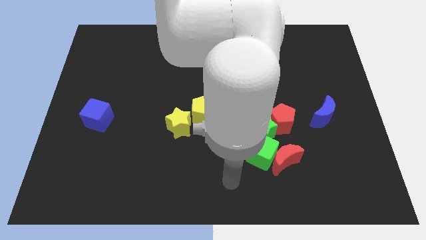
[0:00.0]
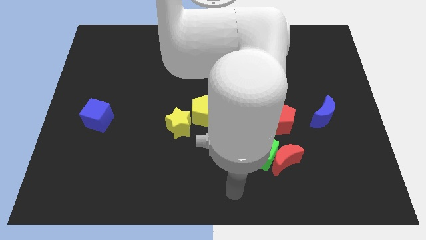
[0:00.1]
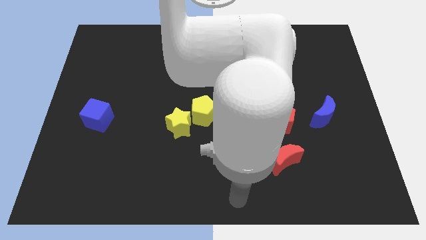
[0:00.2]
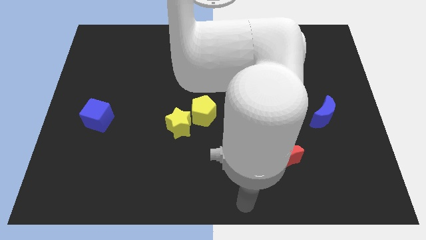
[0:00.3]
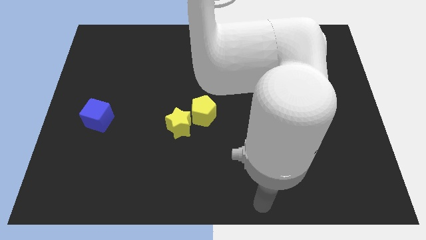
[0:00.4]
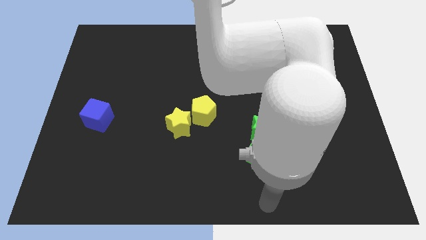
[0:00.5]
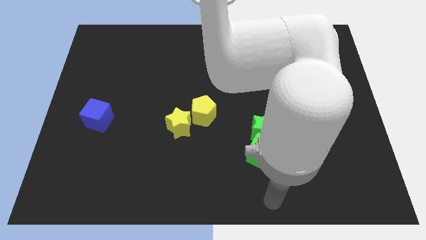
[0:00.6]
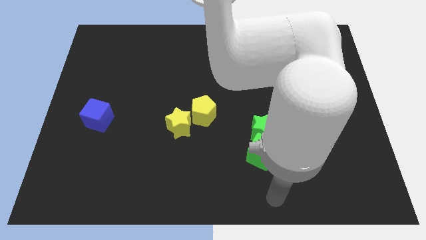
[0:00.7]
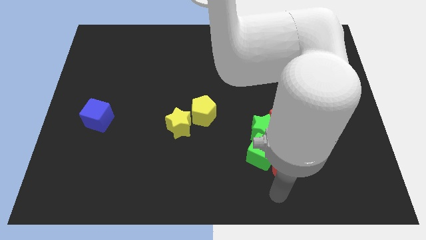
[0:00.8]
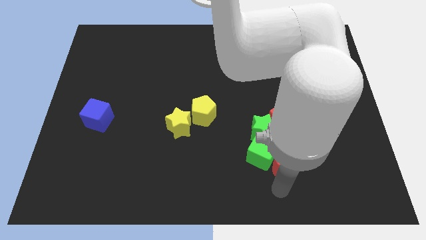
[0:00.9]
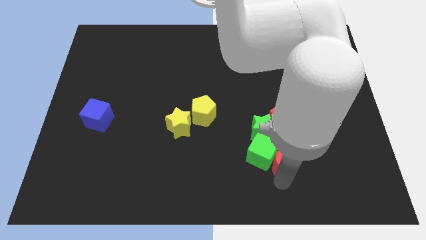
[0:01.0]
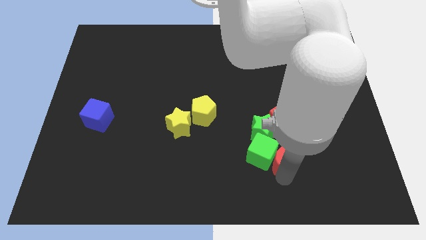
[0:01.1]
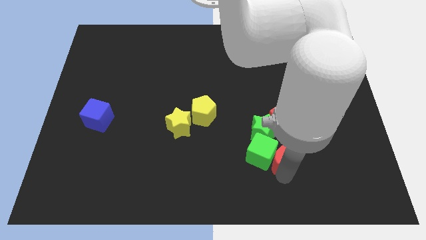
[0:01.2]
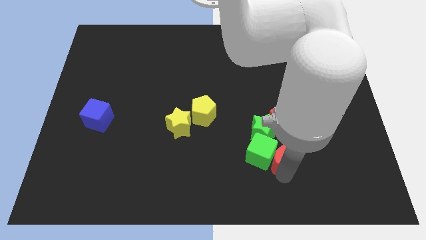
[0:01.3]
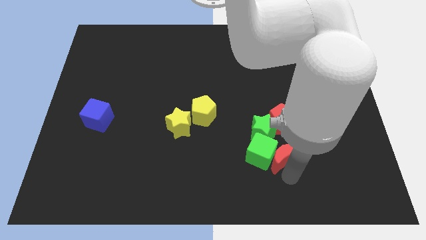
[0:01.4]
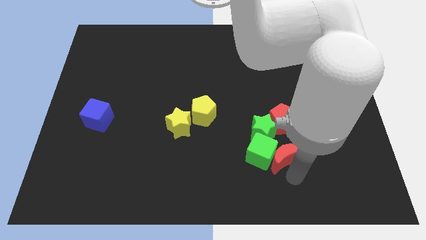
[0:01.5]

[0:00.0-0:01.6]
move the red moon slightly

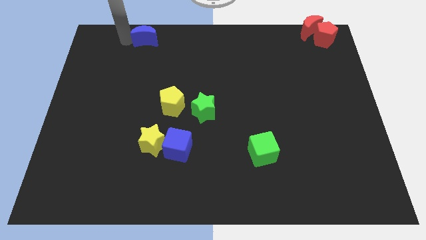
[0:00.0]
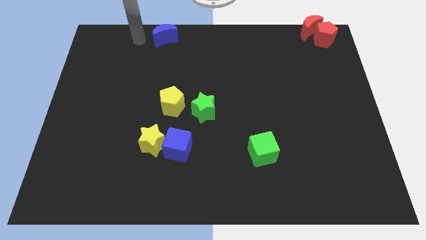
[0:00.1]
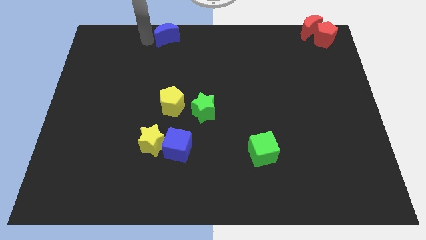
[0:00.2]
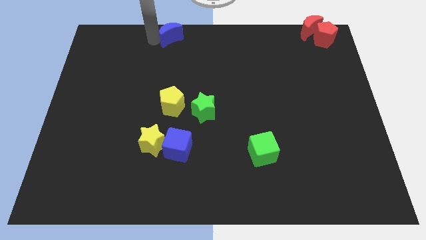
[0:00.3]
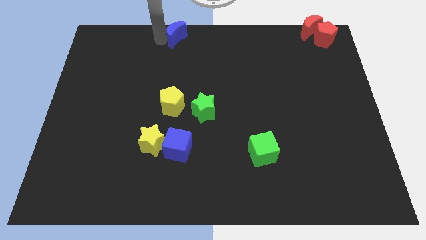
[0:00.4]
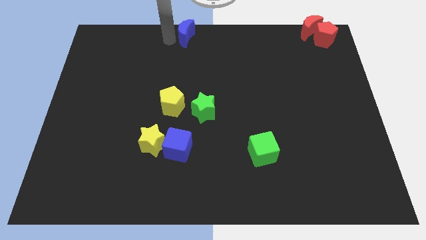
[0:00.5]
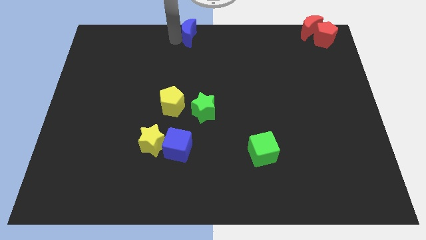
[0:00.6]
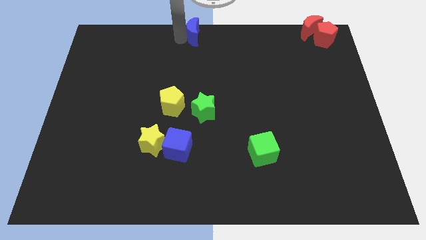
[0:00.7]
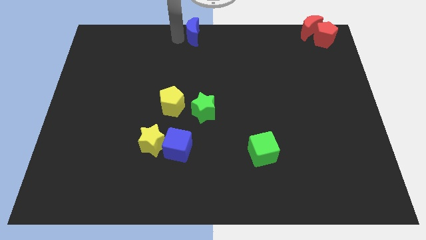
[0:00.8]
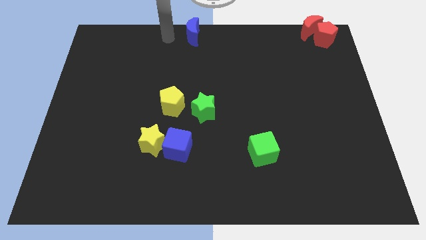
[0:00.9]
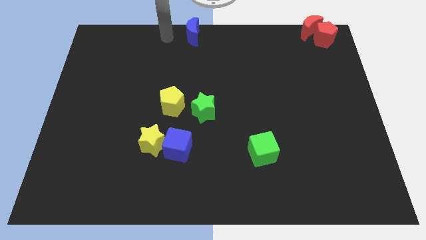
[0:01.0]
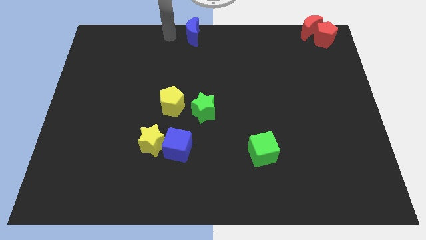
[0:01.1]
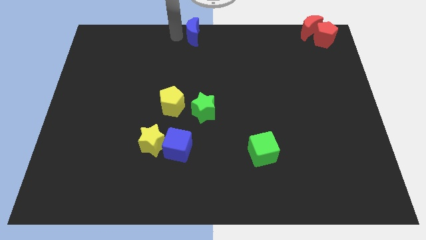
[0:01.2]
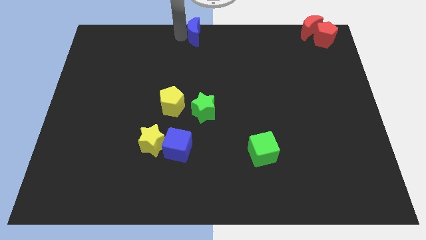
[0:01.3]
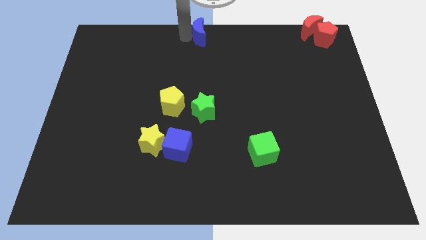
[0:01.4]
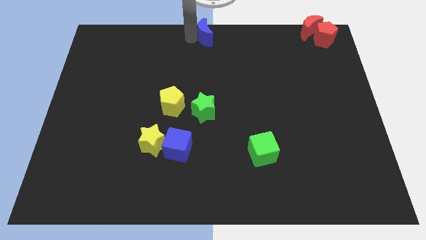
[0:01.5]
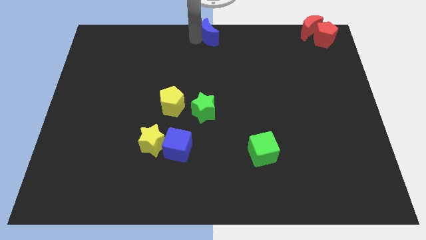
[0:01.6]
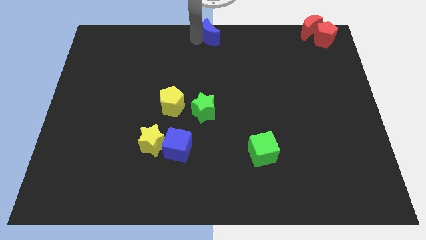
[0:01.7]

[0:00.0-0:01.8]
move the blue crescent to the top of the green star

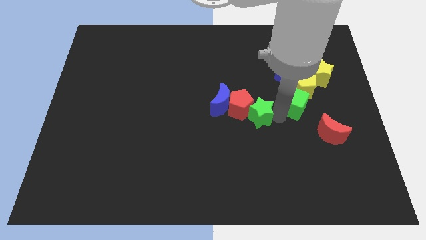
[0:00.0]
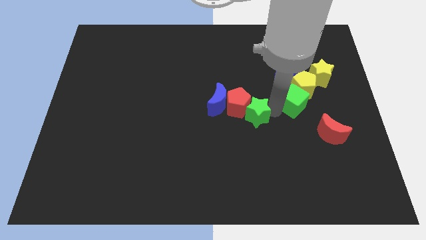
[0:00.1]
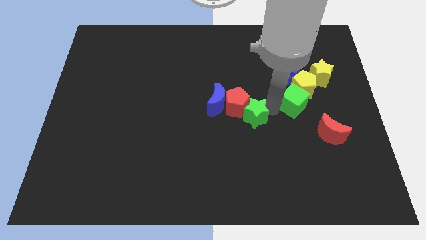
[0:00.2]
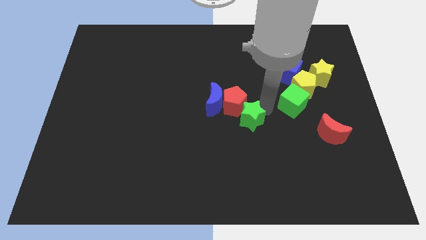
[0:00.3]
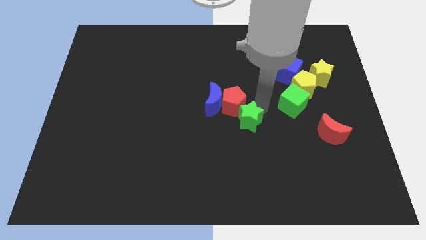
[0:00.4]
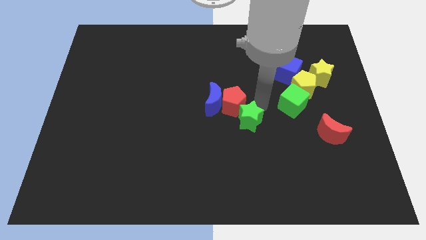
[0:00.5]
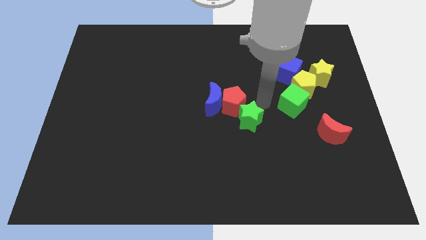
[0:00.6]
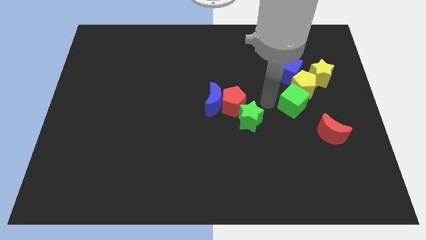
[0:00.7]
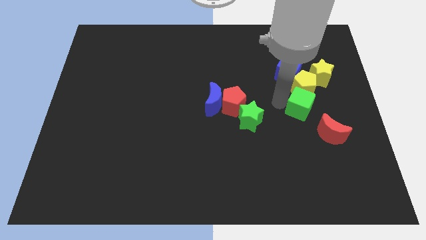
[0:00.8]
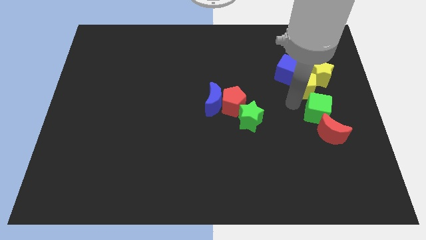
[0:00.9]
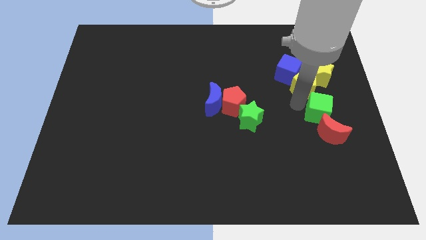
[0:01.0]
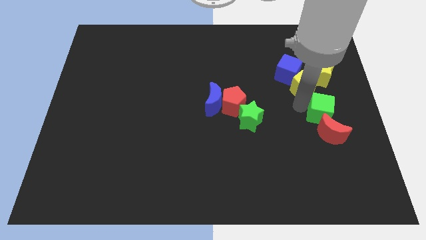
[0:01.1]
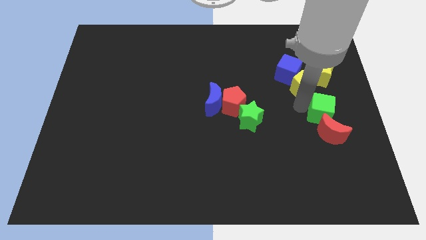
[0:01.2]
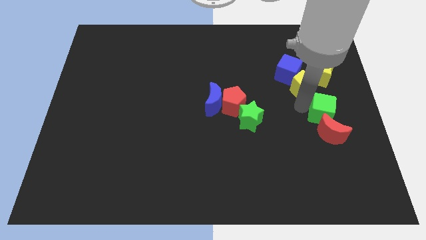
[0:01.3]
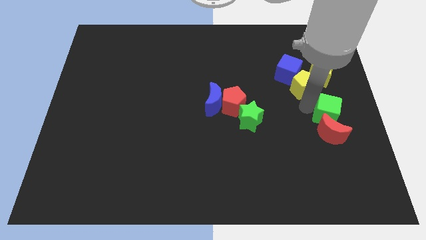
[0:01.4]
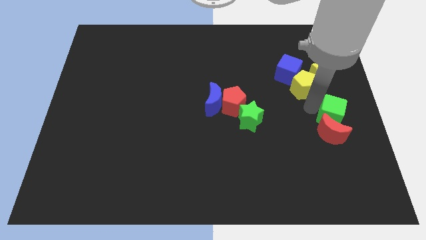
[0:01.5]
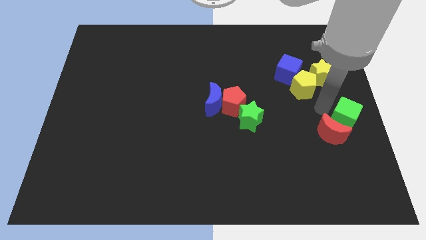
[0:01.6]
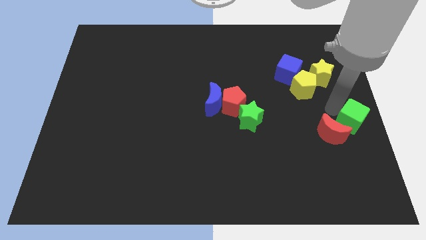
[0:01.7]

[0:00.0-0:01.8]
move the green cube top right of the red crescent

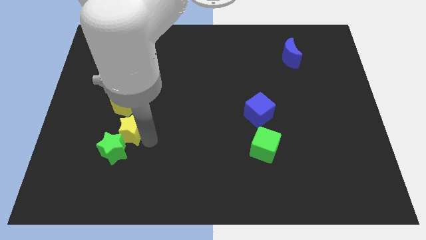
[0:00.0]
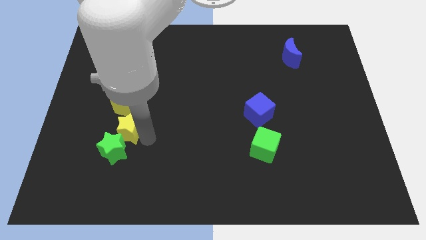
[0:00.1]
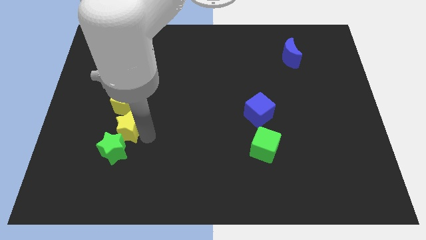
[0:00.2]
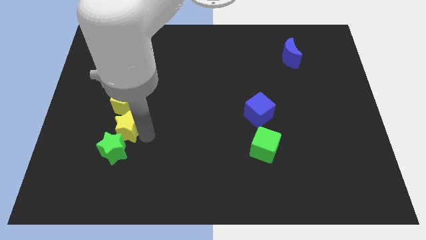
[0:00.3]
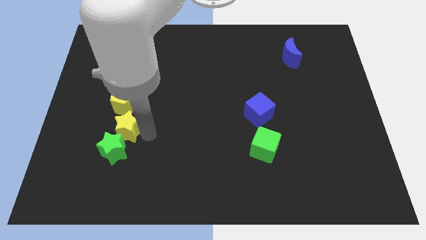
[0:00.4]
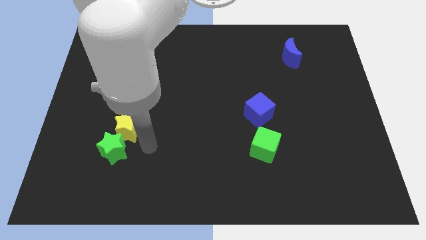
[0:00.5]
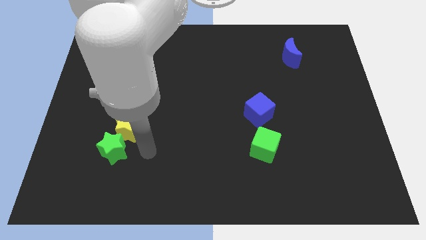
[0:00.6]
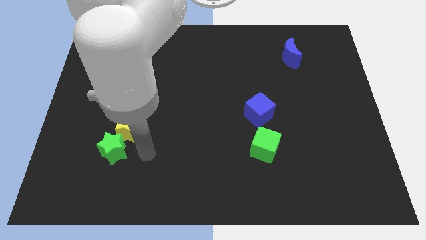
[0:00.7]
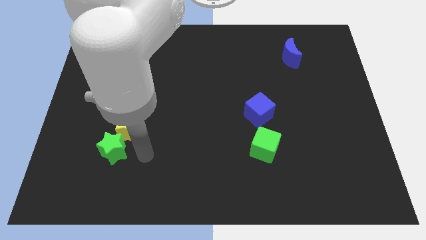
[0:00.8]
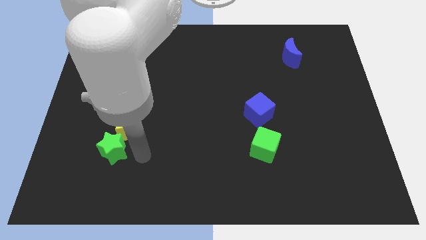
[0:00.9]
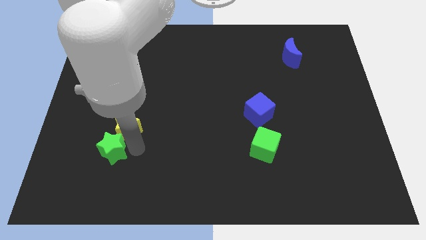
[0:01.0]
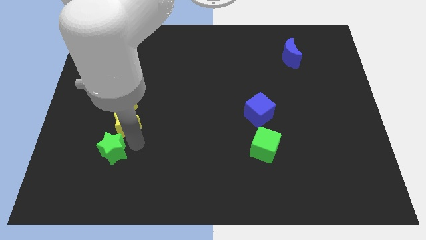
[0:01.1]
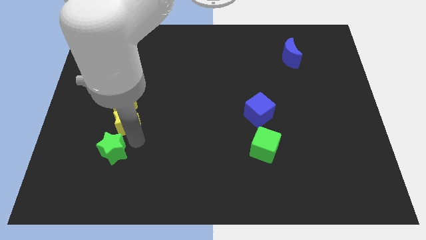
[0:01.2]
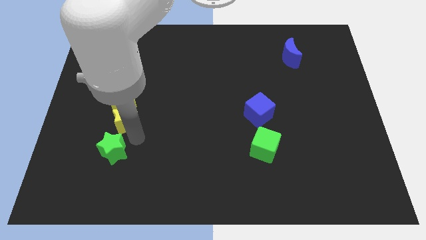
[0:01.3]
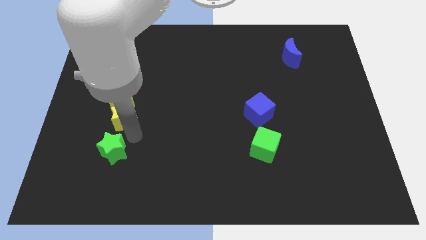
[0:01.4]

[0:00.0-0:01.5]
place yellow star below yellow pentagon

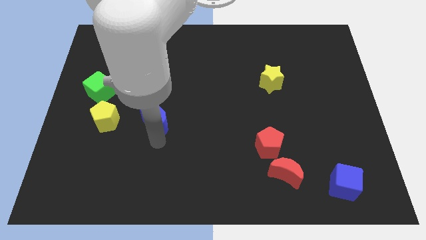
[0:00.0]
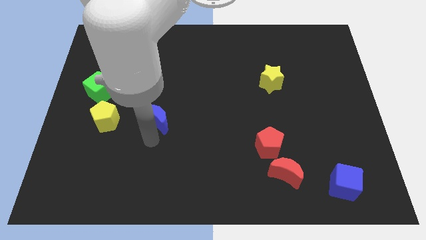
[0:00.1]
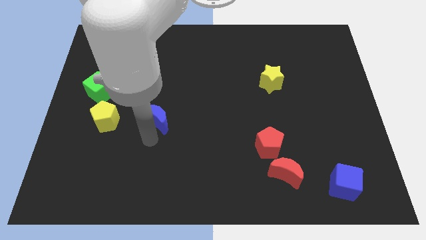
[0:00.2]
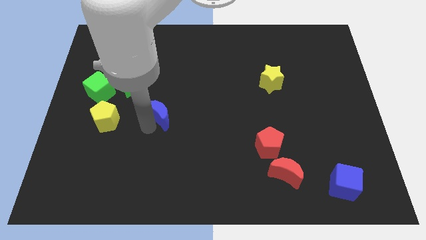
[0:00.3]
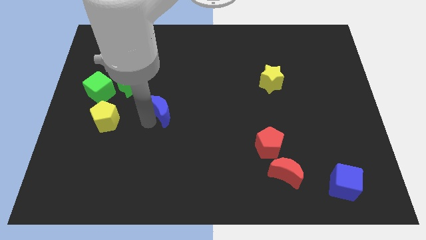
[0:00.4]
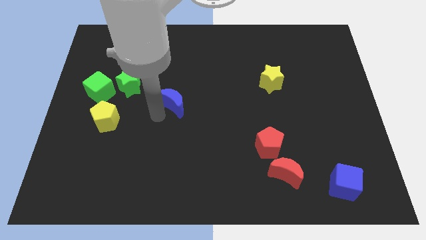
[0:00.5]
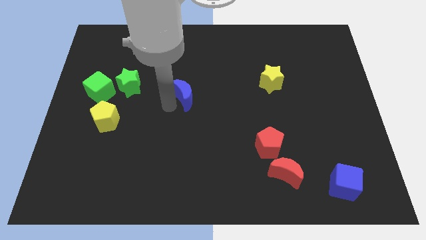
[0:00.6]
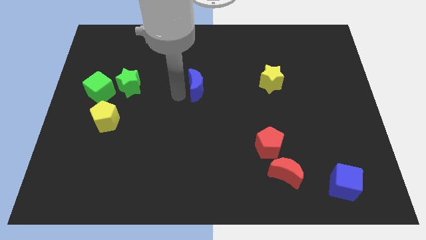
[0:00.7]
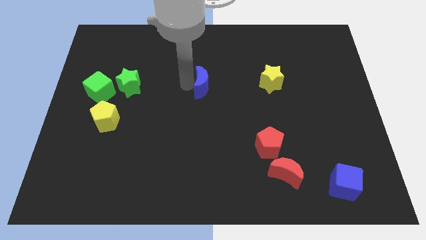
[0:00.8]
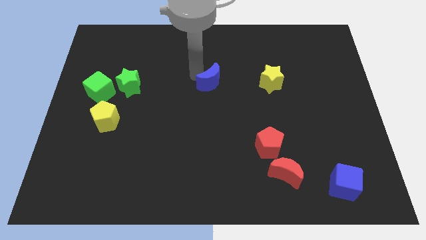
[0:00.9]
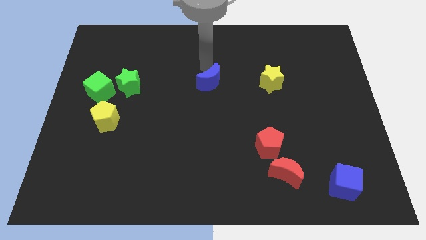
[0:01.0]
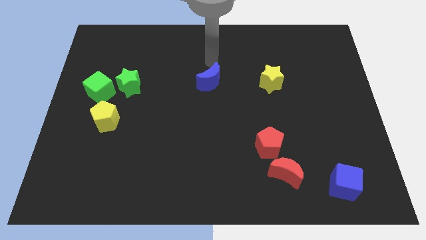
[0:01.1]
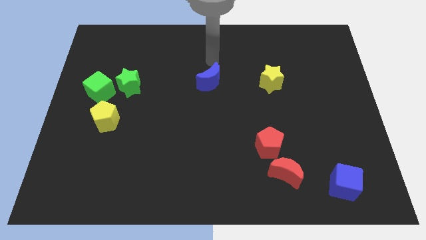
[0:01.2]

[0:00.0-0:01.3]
place the blue moon in between green star and yellow star

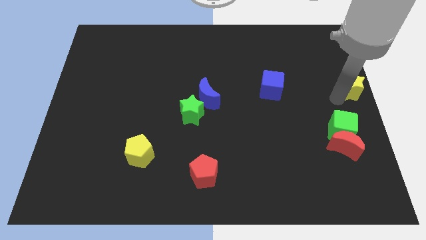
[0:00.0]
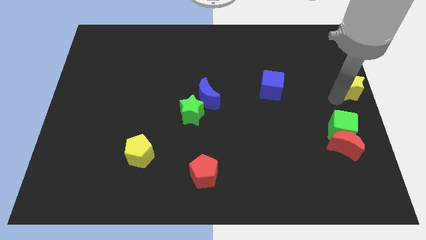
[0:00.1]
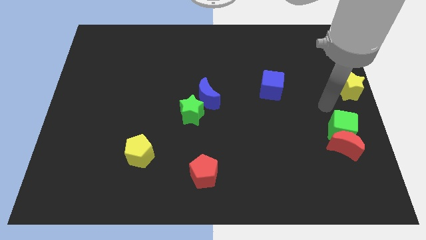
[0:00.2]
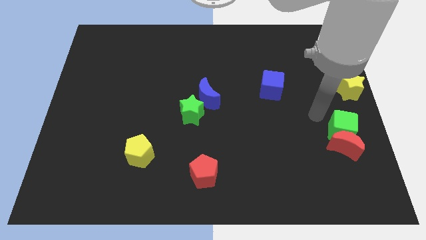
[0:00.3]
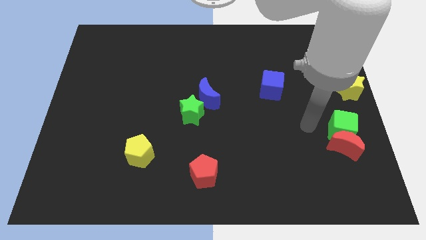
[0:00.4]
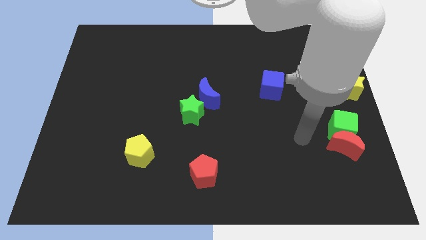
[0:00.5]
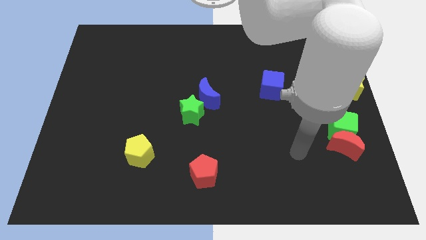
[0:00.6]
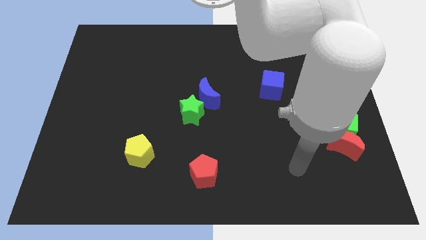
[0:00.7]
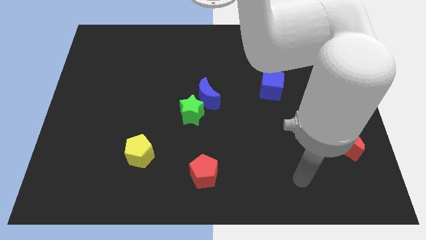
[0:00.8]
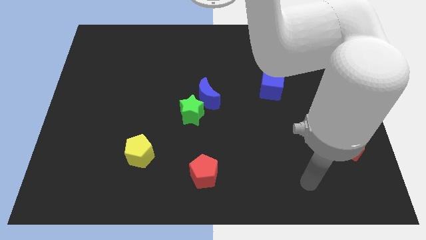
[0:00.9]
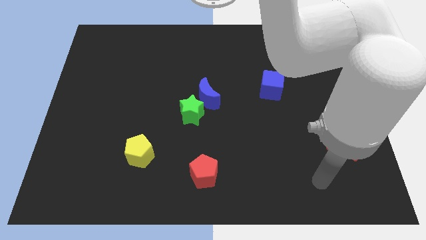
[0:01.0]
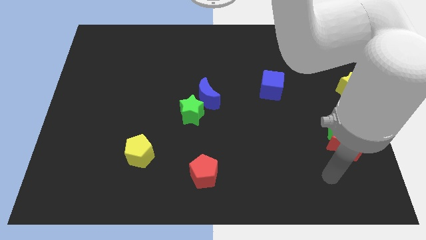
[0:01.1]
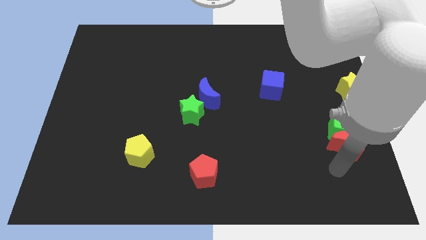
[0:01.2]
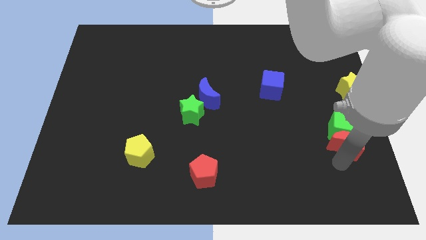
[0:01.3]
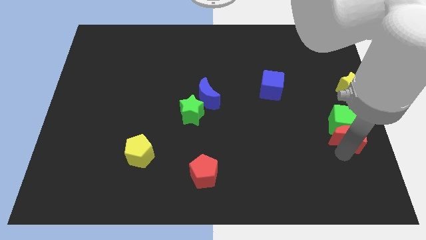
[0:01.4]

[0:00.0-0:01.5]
place the arm to the bottom side of the red moon
